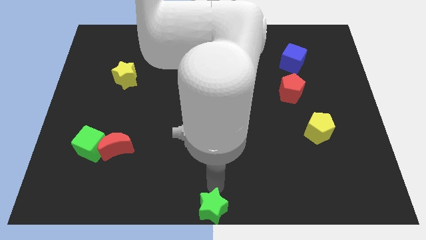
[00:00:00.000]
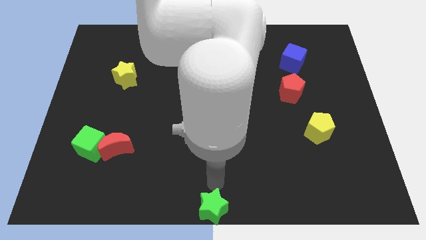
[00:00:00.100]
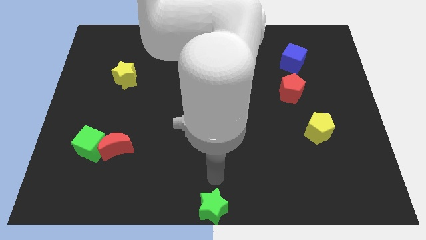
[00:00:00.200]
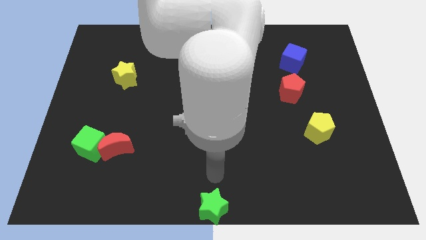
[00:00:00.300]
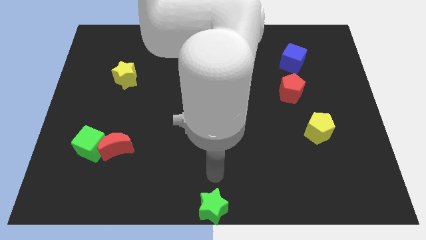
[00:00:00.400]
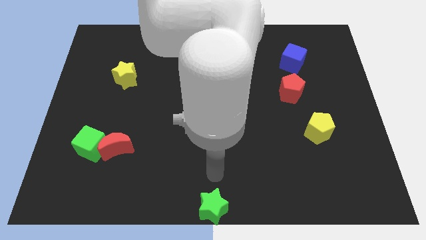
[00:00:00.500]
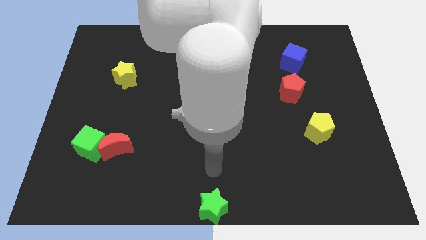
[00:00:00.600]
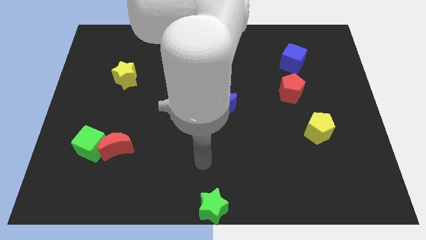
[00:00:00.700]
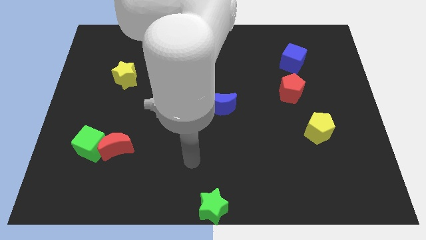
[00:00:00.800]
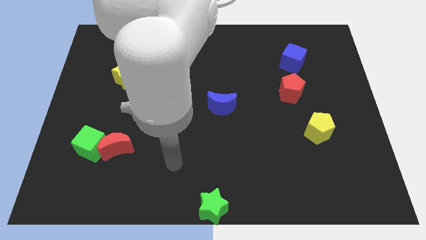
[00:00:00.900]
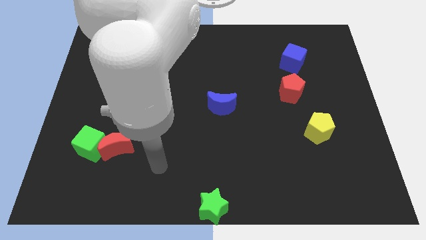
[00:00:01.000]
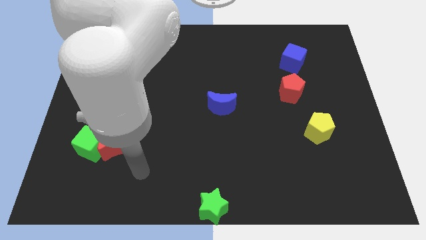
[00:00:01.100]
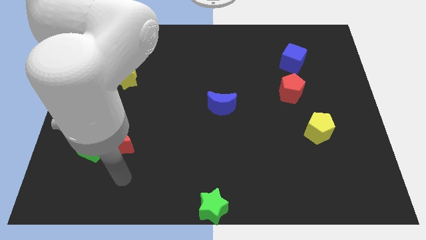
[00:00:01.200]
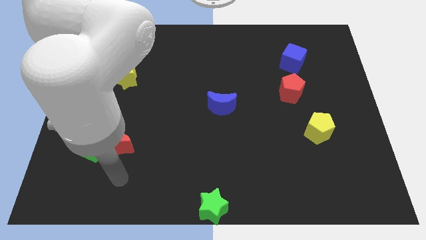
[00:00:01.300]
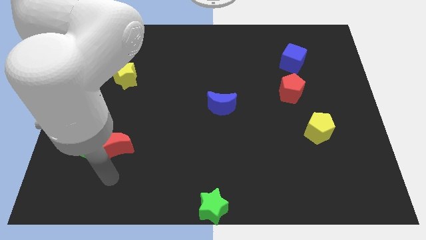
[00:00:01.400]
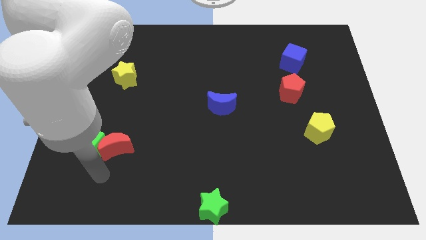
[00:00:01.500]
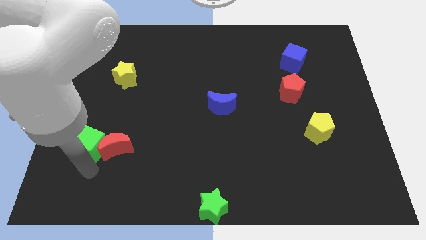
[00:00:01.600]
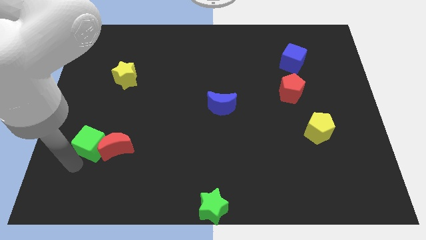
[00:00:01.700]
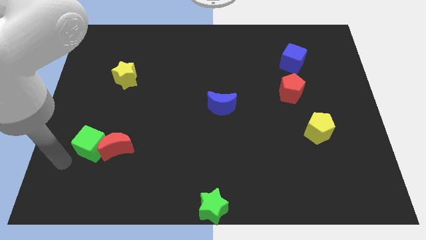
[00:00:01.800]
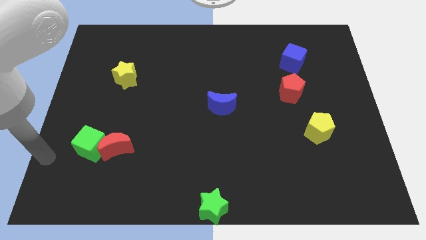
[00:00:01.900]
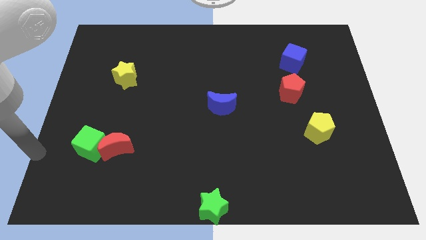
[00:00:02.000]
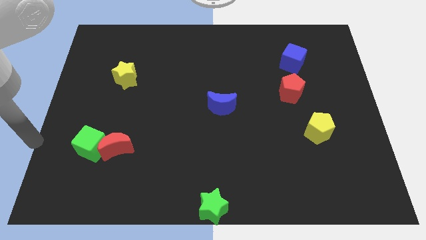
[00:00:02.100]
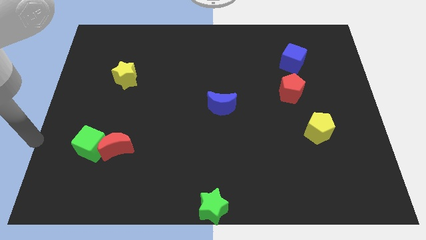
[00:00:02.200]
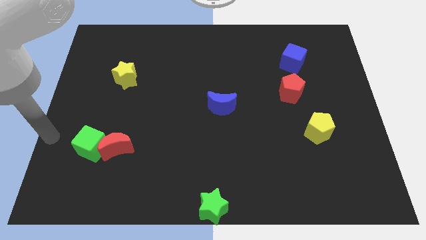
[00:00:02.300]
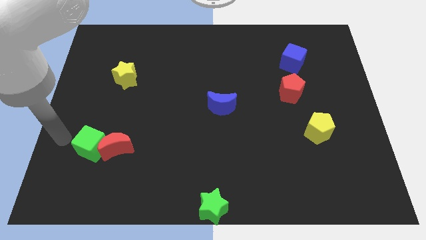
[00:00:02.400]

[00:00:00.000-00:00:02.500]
place your arm to the left of green cube

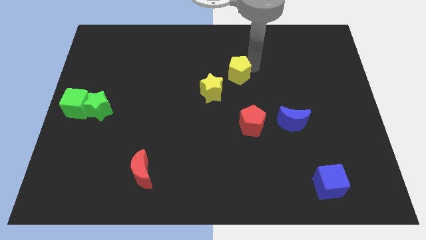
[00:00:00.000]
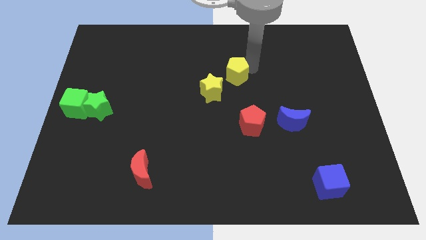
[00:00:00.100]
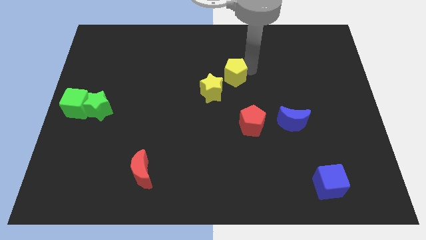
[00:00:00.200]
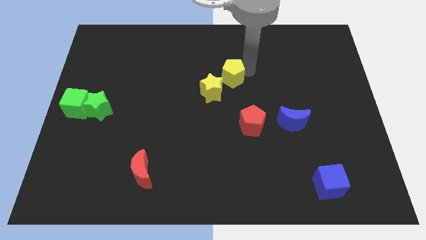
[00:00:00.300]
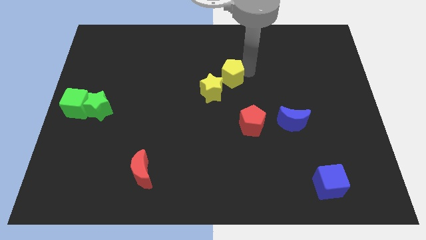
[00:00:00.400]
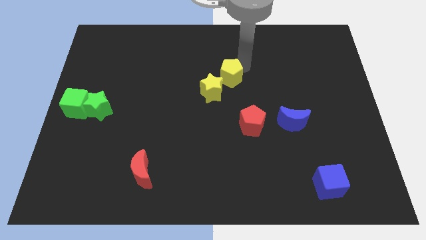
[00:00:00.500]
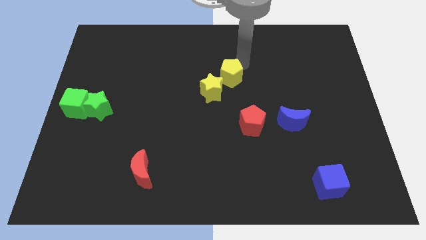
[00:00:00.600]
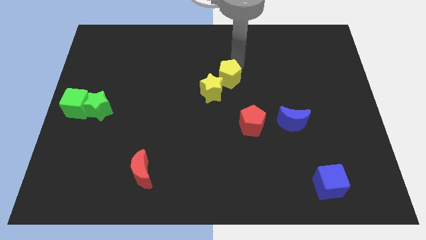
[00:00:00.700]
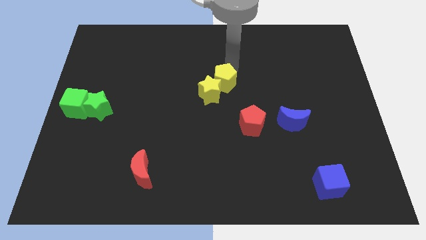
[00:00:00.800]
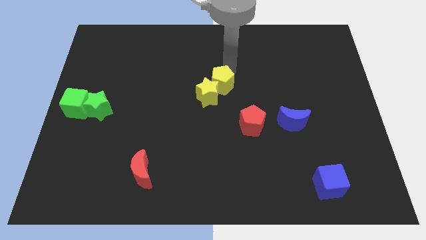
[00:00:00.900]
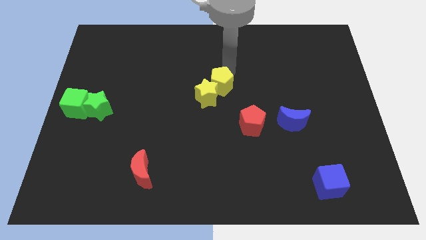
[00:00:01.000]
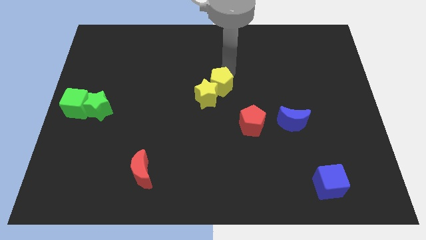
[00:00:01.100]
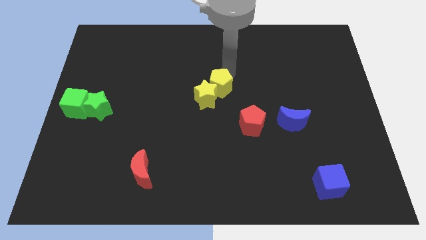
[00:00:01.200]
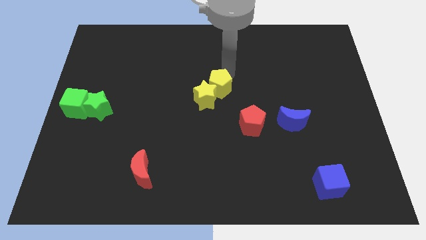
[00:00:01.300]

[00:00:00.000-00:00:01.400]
push the yellow pentagon into the yellow star

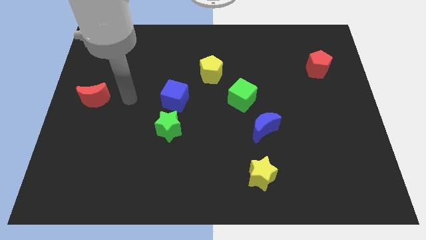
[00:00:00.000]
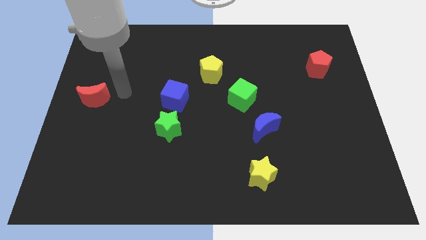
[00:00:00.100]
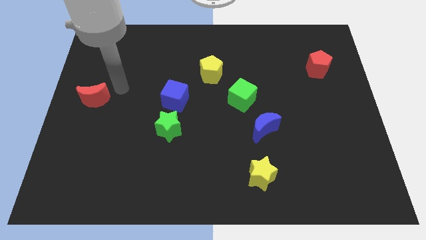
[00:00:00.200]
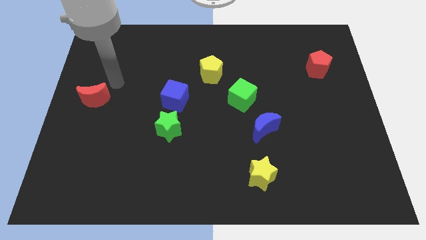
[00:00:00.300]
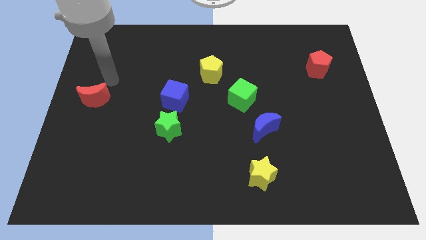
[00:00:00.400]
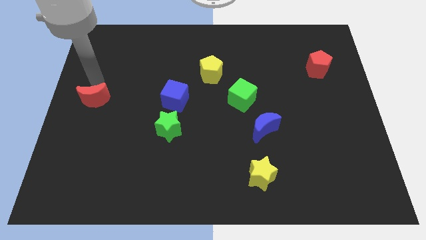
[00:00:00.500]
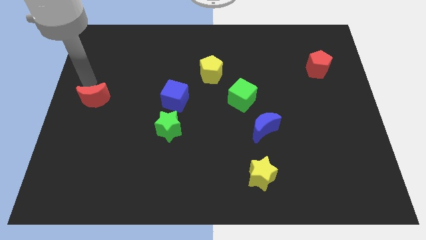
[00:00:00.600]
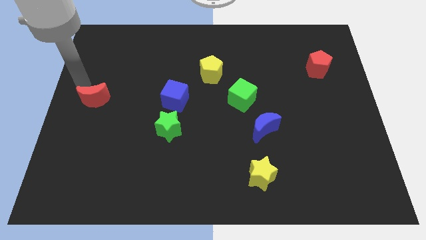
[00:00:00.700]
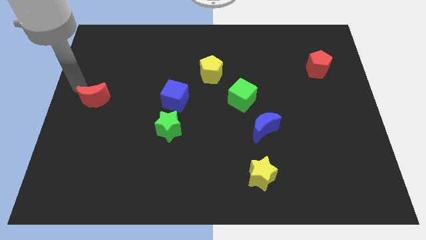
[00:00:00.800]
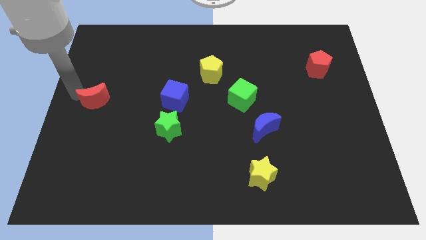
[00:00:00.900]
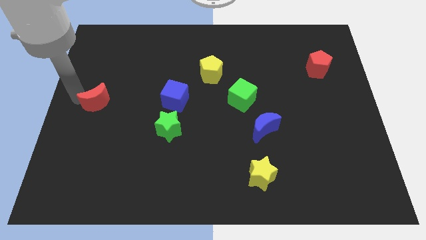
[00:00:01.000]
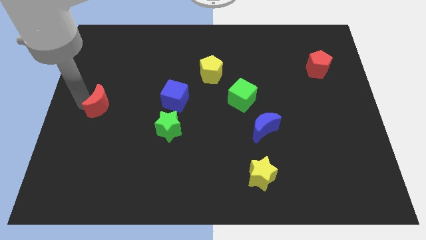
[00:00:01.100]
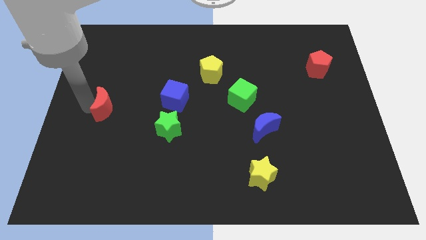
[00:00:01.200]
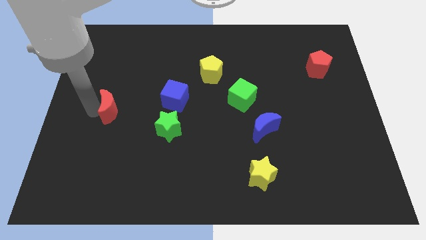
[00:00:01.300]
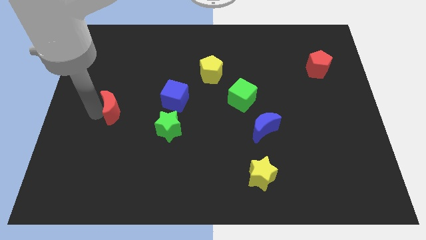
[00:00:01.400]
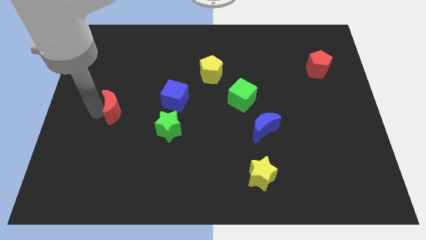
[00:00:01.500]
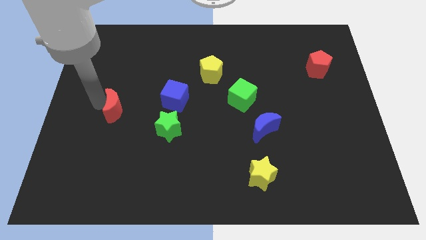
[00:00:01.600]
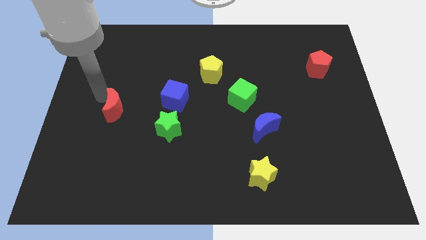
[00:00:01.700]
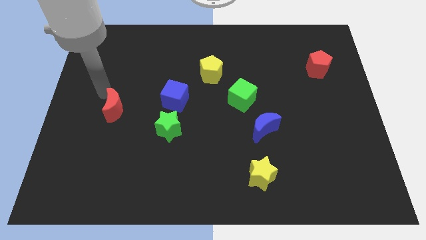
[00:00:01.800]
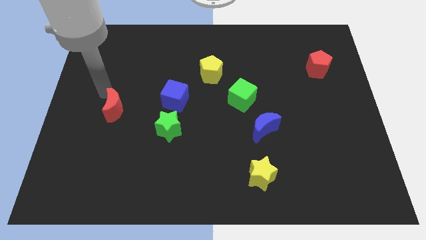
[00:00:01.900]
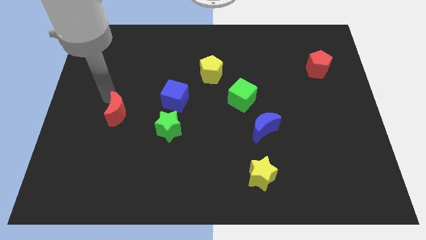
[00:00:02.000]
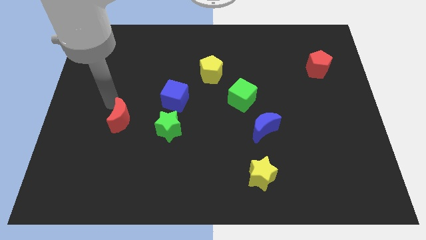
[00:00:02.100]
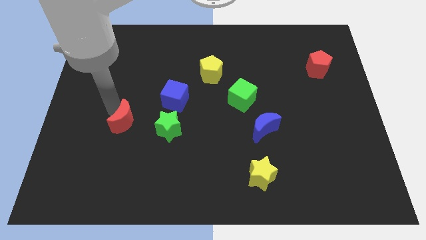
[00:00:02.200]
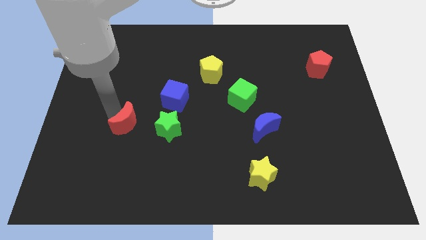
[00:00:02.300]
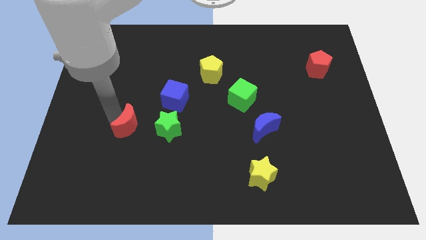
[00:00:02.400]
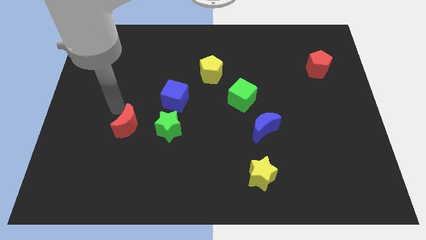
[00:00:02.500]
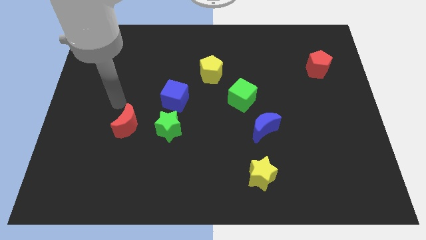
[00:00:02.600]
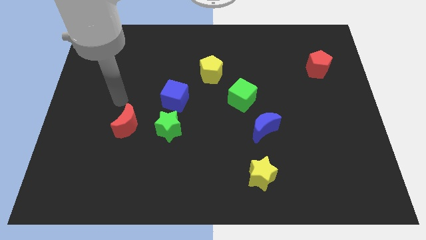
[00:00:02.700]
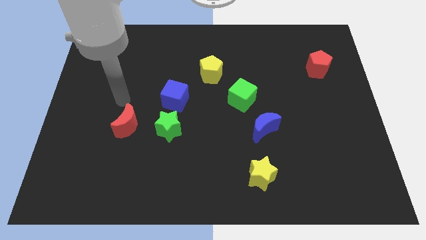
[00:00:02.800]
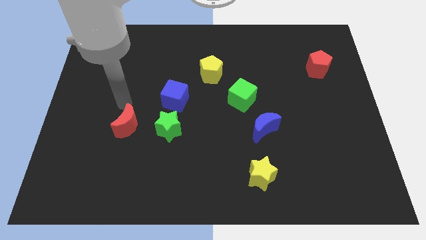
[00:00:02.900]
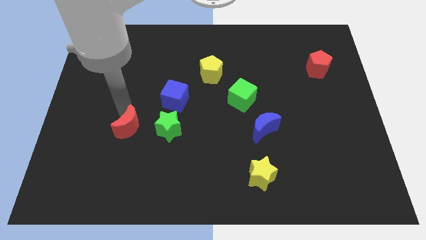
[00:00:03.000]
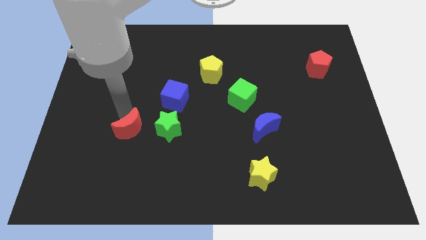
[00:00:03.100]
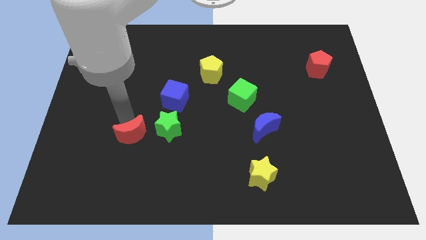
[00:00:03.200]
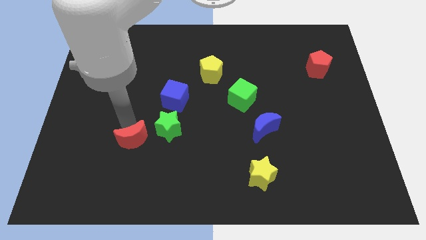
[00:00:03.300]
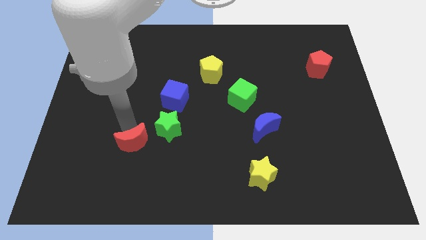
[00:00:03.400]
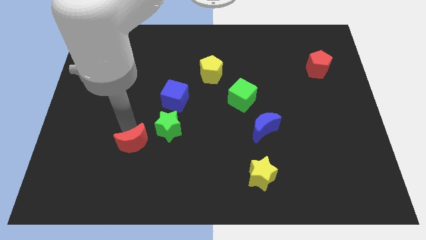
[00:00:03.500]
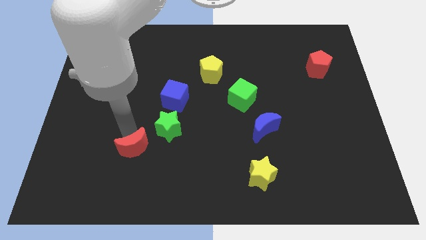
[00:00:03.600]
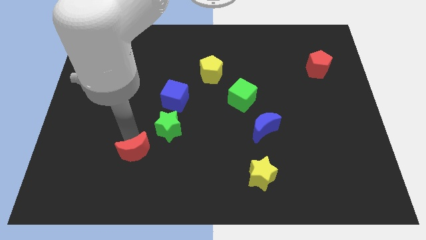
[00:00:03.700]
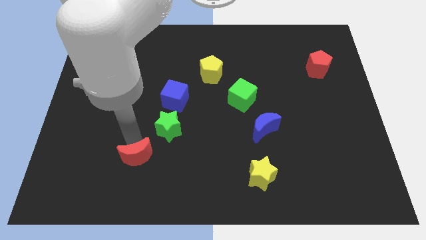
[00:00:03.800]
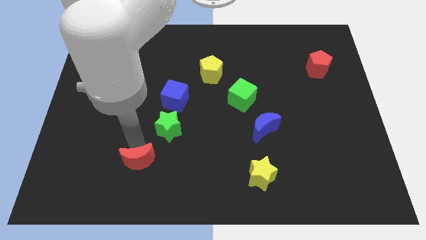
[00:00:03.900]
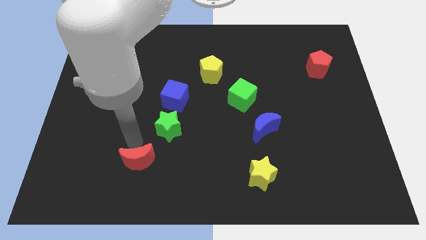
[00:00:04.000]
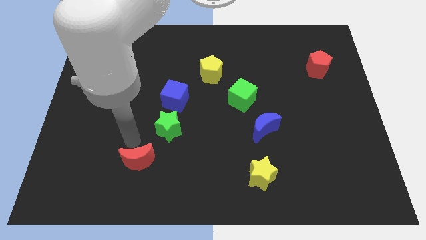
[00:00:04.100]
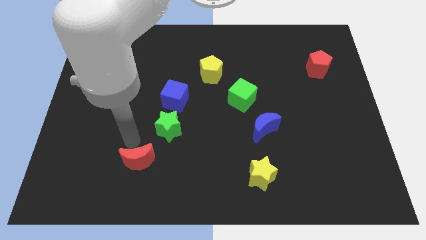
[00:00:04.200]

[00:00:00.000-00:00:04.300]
place the red moon diagonal below green star

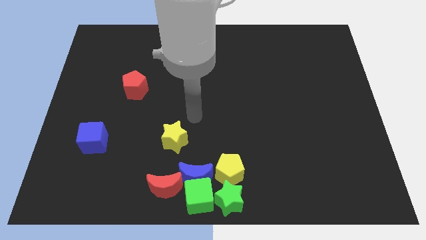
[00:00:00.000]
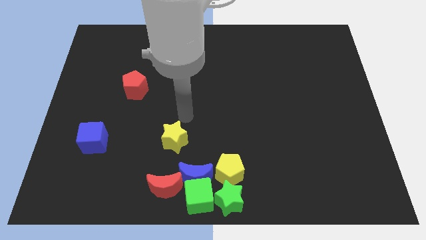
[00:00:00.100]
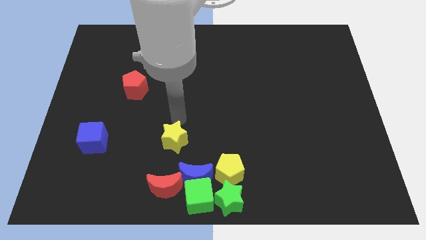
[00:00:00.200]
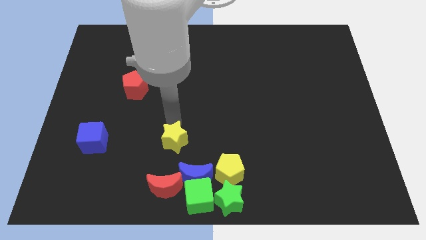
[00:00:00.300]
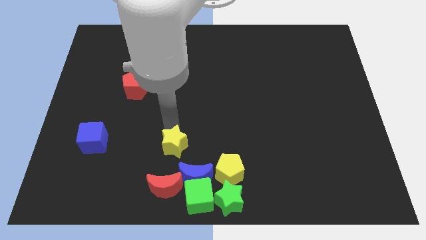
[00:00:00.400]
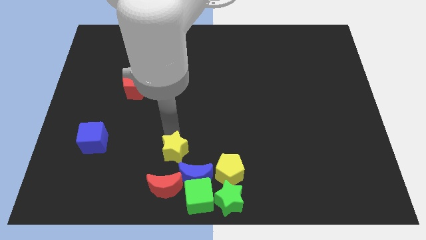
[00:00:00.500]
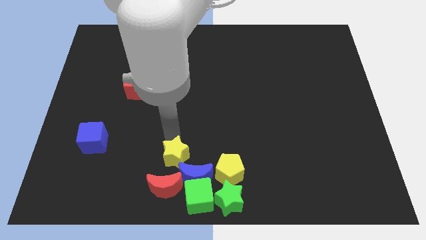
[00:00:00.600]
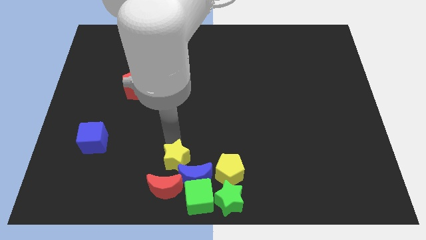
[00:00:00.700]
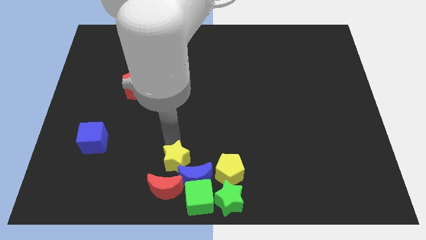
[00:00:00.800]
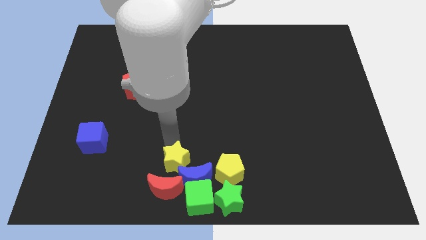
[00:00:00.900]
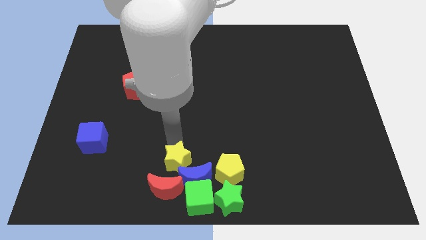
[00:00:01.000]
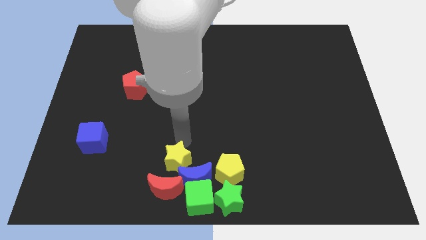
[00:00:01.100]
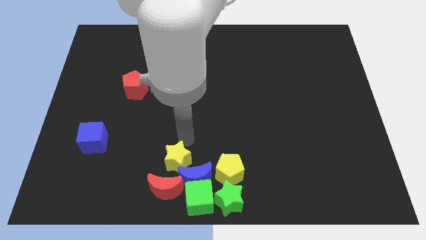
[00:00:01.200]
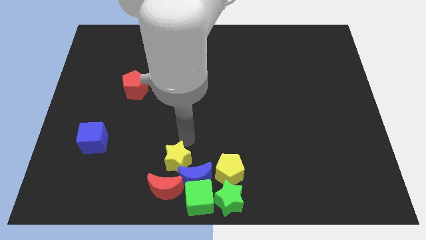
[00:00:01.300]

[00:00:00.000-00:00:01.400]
move the yellow star towards the blue crescent
